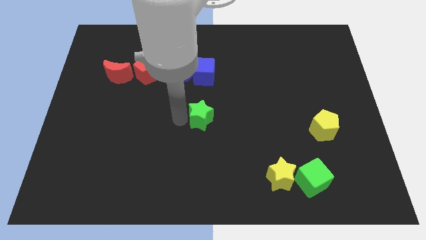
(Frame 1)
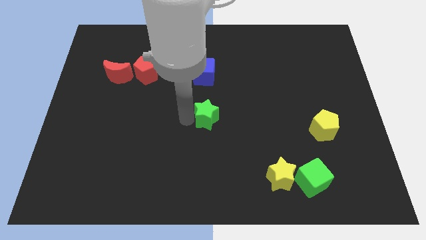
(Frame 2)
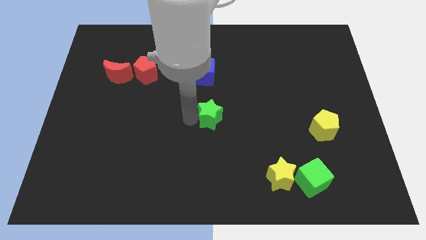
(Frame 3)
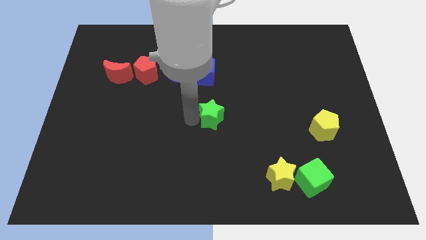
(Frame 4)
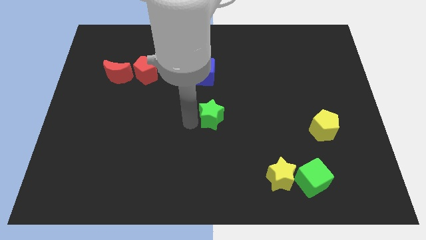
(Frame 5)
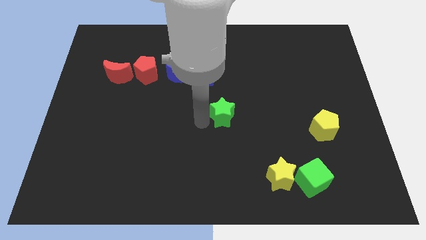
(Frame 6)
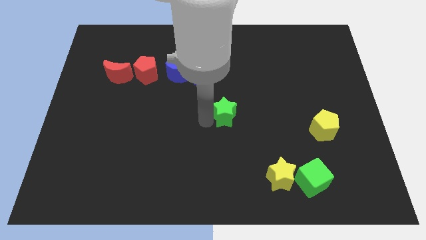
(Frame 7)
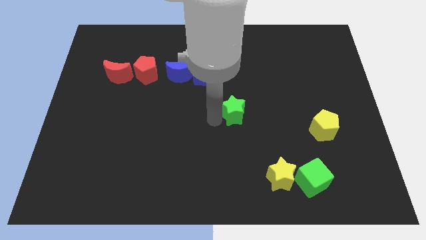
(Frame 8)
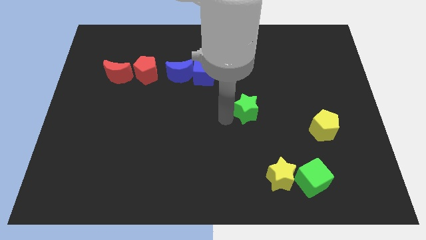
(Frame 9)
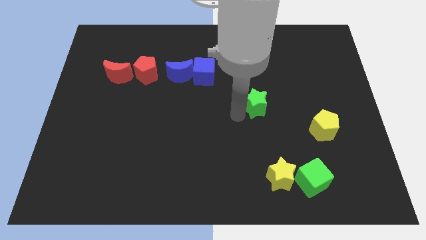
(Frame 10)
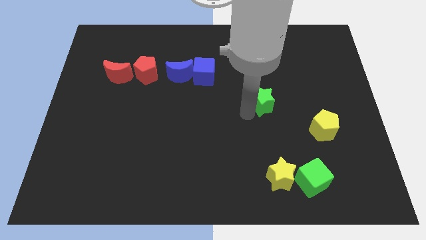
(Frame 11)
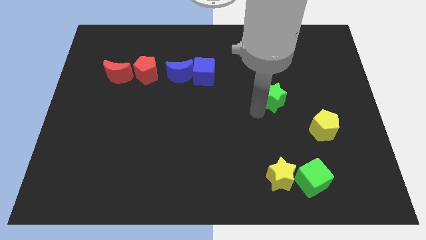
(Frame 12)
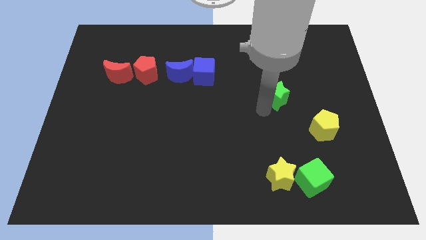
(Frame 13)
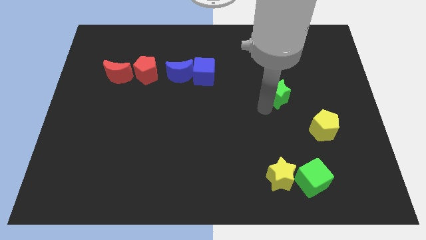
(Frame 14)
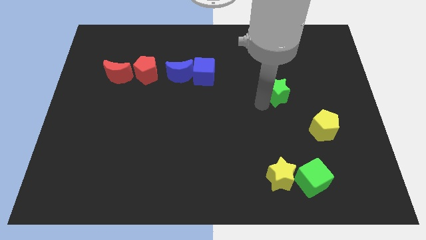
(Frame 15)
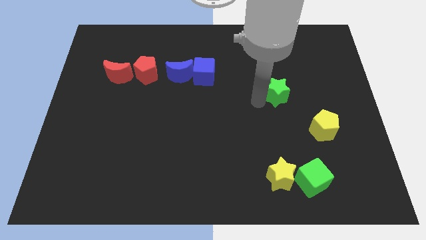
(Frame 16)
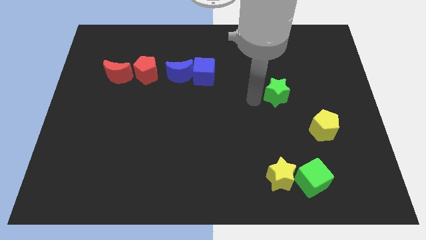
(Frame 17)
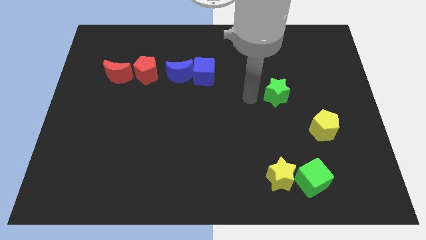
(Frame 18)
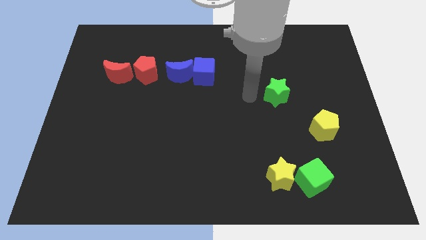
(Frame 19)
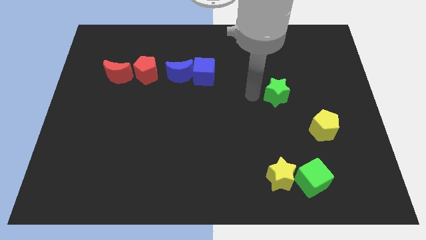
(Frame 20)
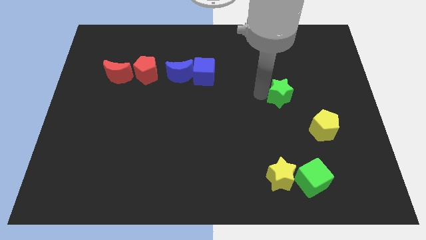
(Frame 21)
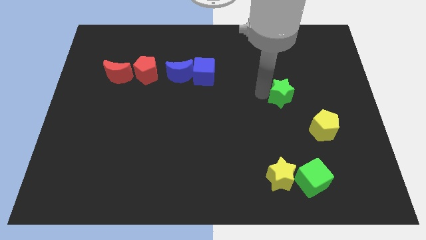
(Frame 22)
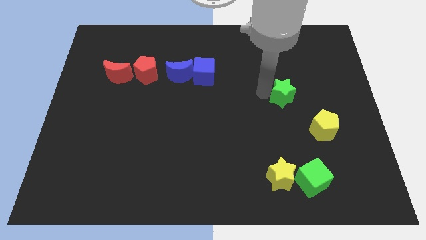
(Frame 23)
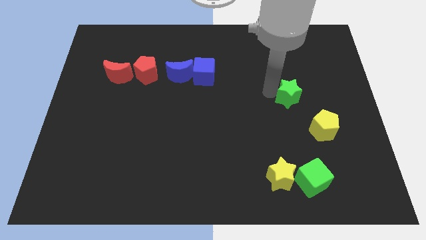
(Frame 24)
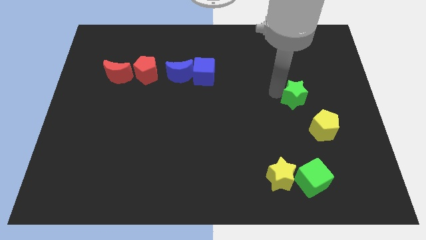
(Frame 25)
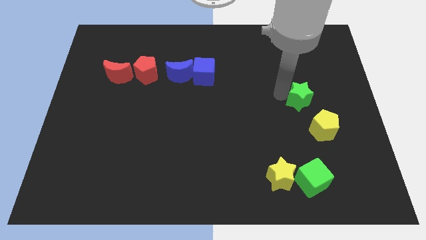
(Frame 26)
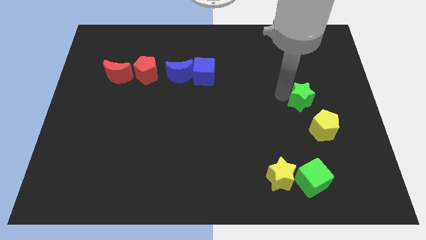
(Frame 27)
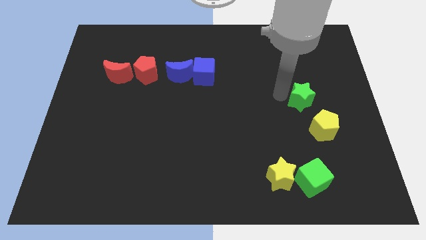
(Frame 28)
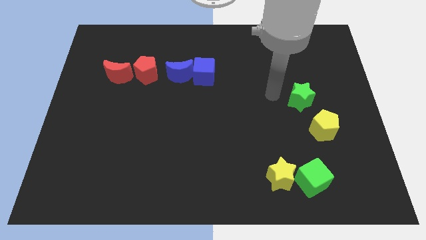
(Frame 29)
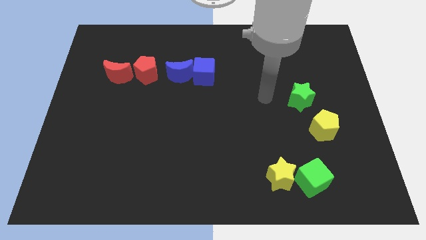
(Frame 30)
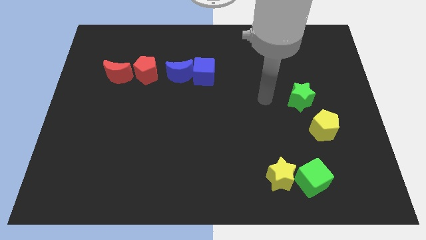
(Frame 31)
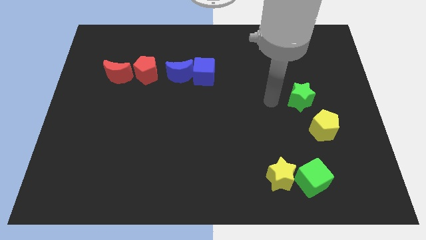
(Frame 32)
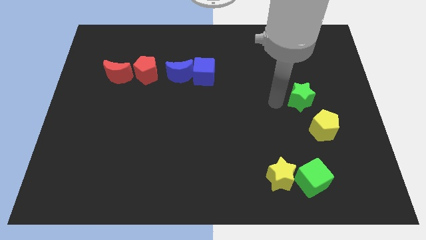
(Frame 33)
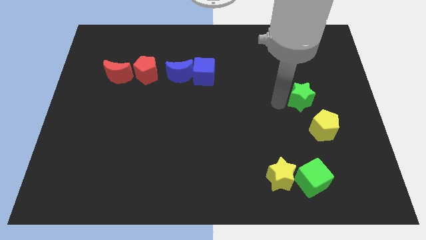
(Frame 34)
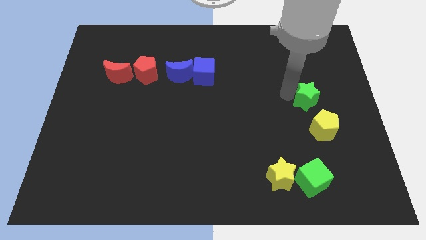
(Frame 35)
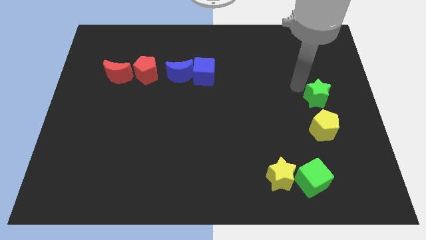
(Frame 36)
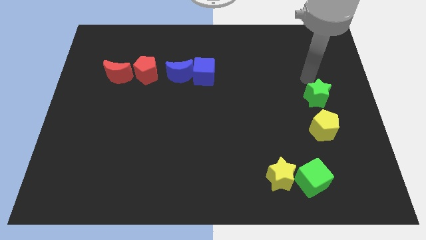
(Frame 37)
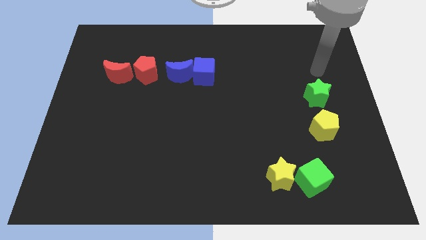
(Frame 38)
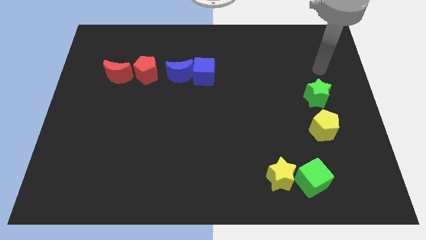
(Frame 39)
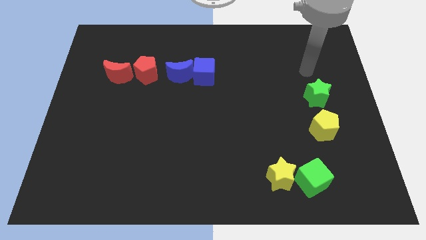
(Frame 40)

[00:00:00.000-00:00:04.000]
place the green star above the yellow pentagon

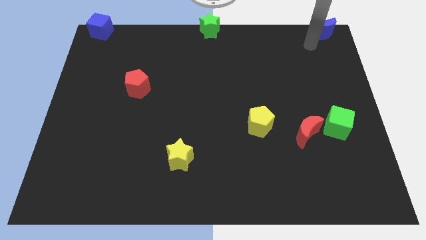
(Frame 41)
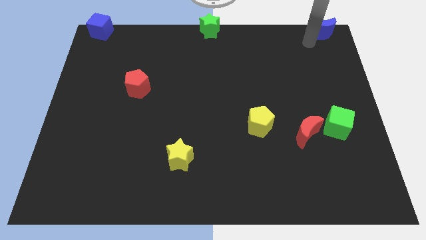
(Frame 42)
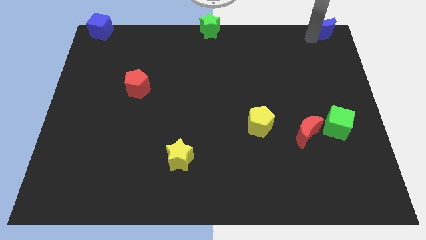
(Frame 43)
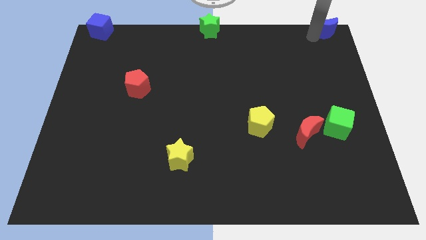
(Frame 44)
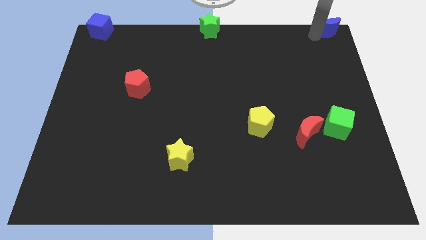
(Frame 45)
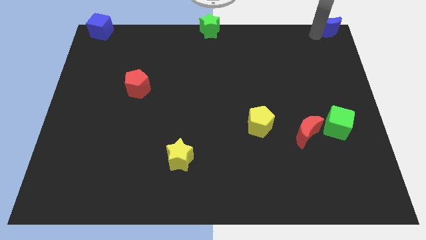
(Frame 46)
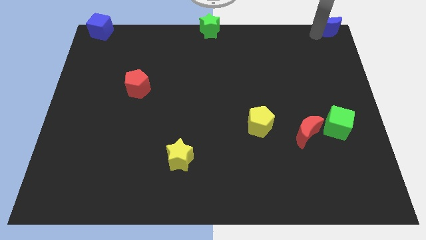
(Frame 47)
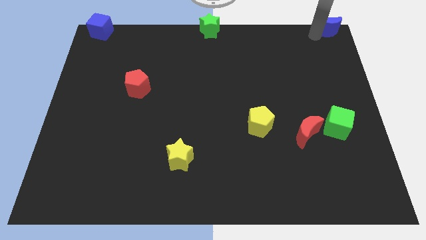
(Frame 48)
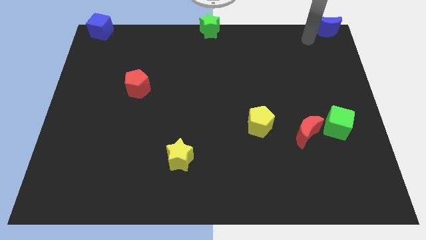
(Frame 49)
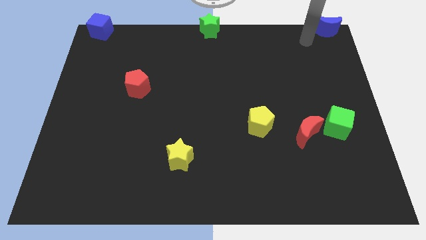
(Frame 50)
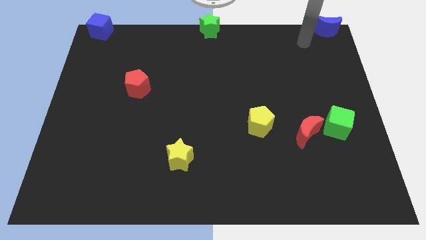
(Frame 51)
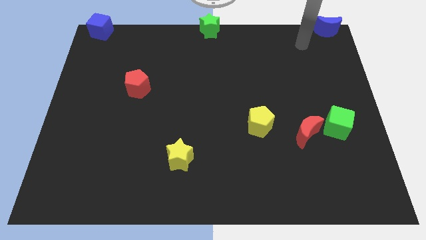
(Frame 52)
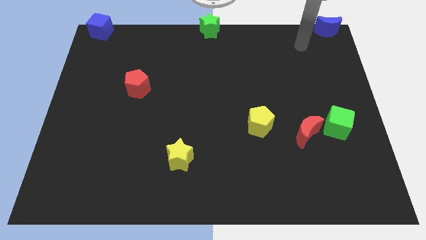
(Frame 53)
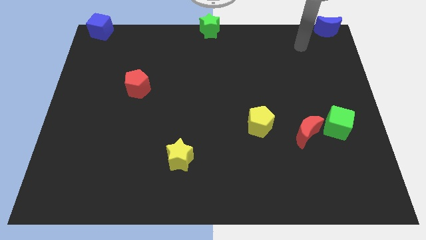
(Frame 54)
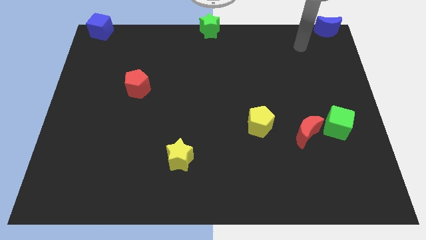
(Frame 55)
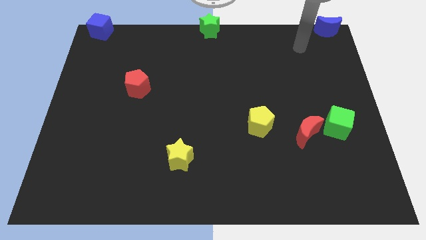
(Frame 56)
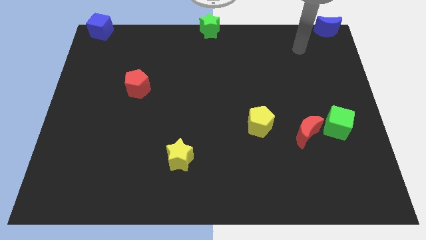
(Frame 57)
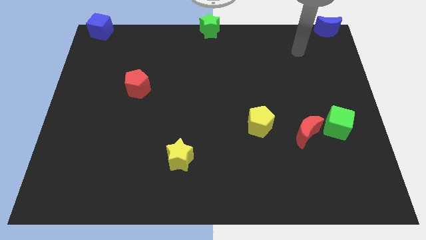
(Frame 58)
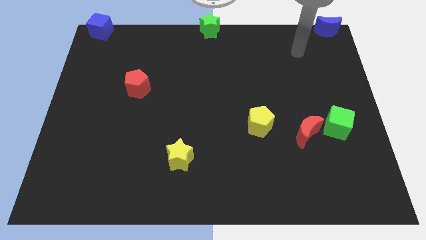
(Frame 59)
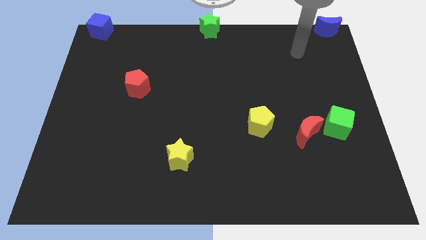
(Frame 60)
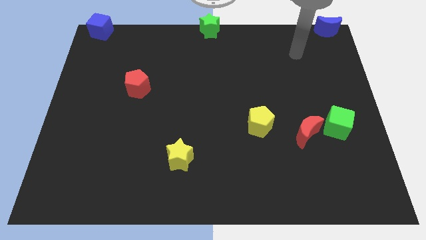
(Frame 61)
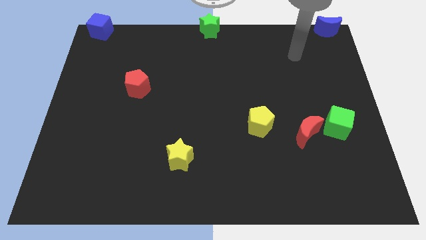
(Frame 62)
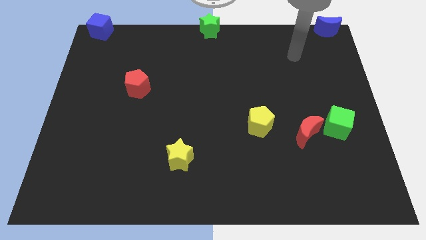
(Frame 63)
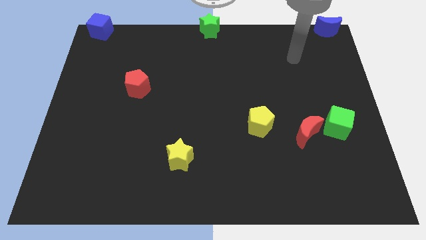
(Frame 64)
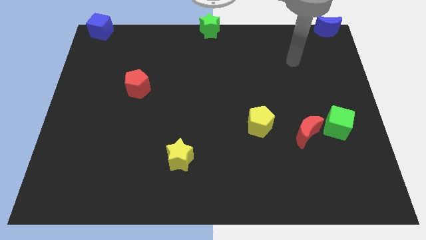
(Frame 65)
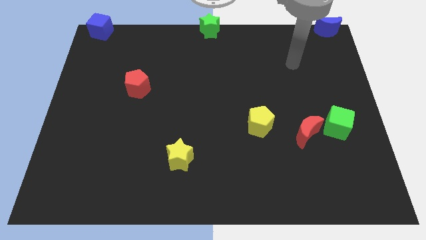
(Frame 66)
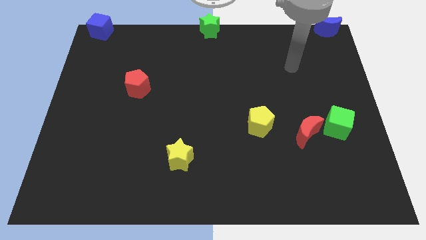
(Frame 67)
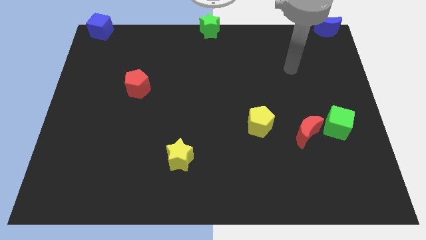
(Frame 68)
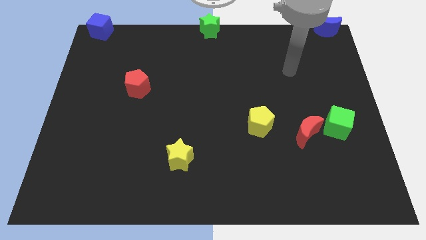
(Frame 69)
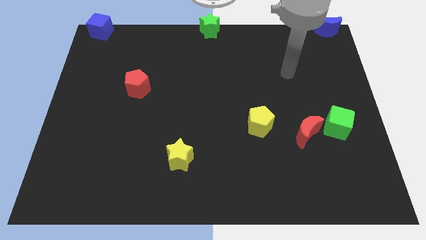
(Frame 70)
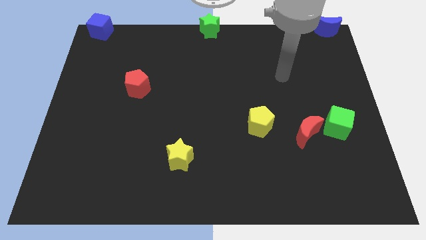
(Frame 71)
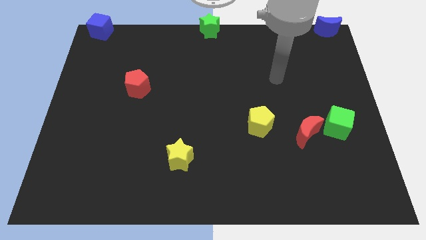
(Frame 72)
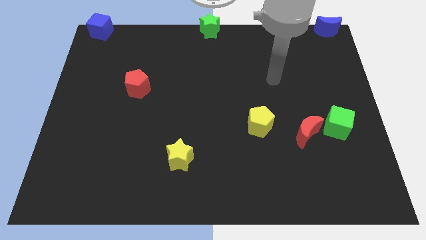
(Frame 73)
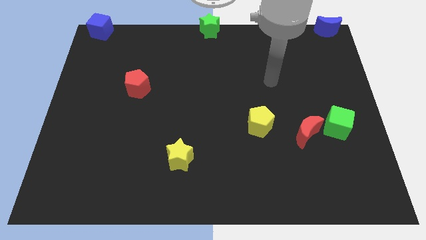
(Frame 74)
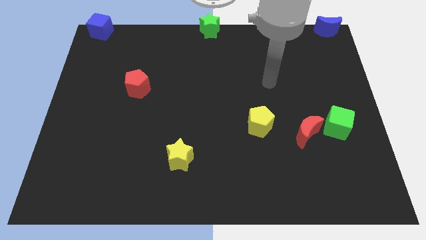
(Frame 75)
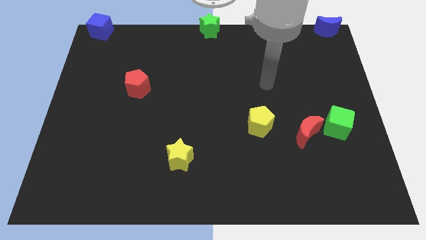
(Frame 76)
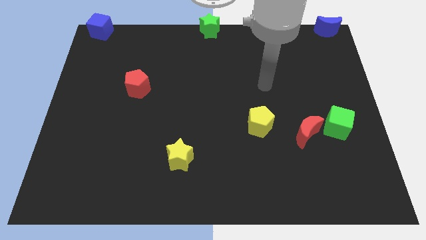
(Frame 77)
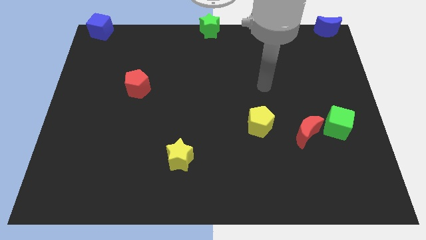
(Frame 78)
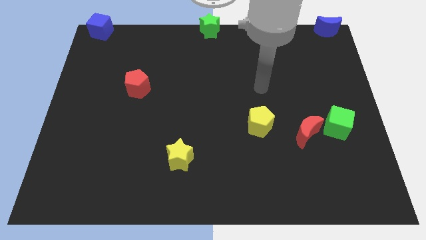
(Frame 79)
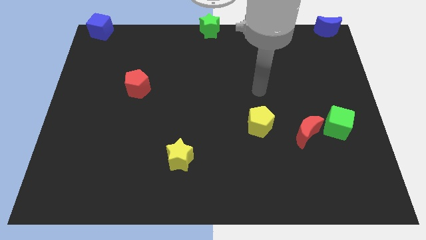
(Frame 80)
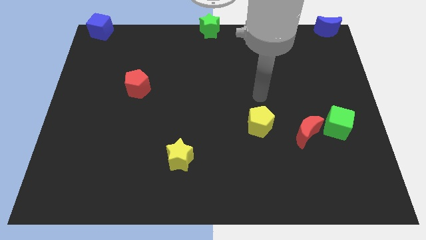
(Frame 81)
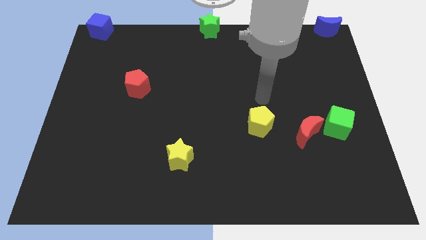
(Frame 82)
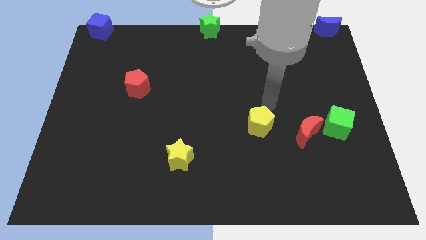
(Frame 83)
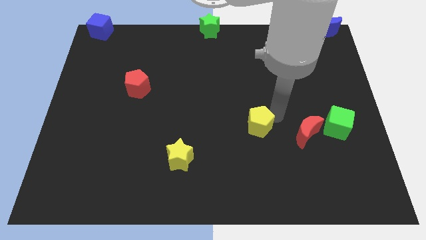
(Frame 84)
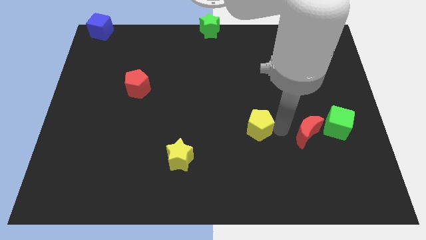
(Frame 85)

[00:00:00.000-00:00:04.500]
place the arm right to the yellow pentagon

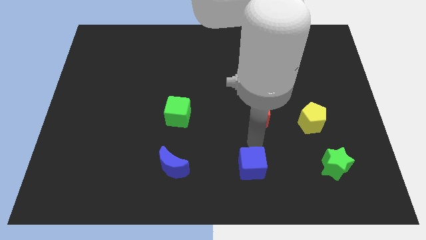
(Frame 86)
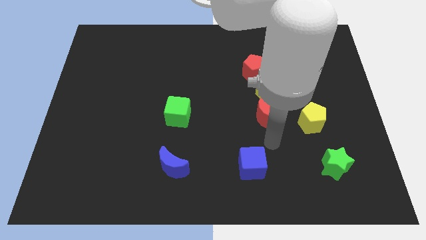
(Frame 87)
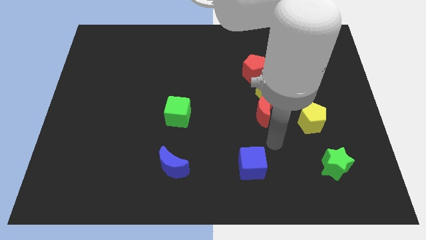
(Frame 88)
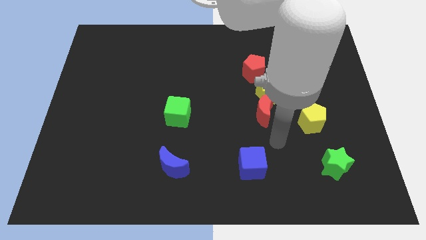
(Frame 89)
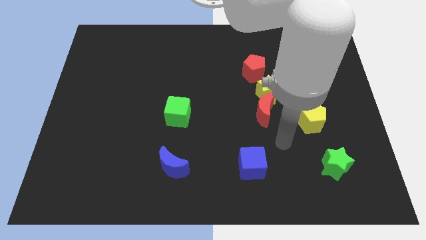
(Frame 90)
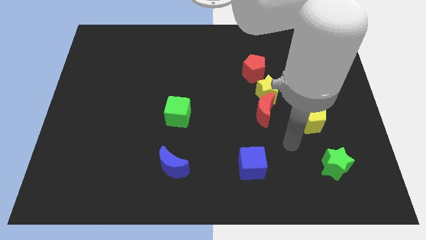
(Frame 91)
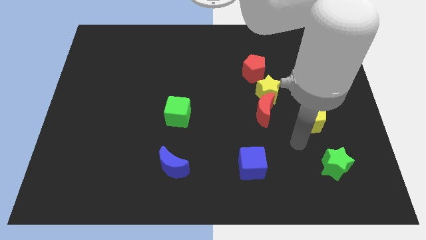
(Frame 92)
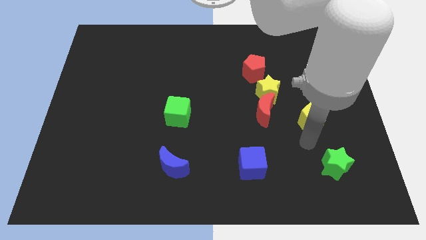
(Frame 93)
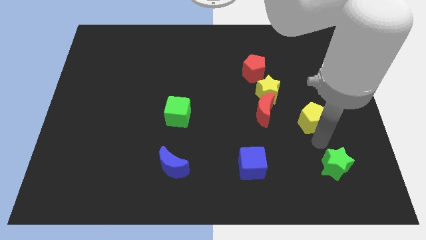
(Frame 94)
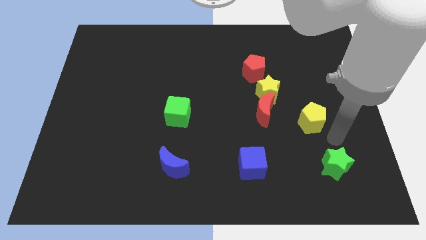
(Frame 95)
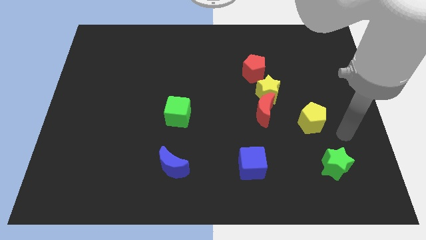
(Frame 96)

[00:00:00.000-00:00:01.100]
place your arm to the bottom side of the yellow pentagon
